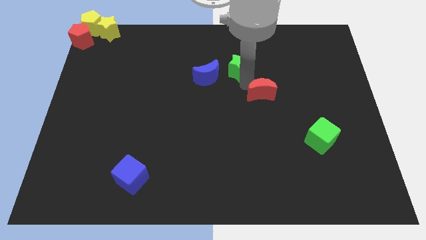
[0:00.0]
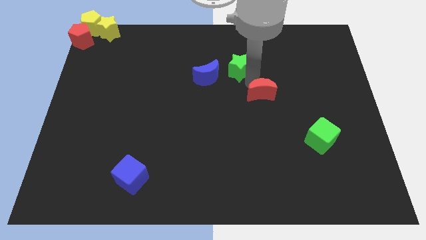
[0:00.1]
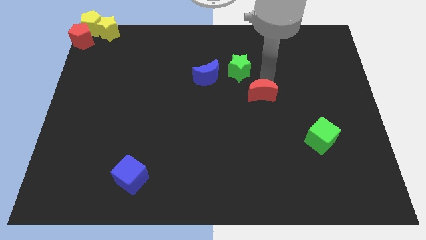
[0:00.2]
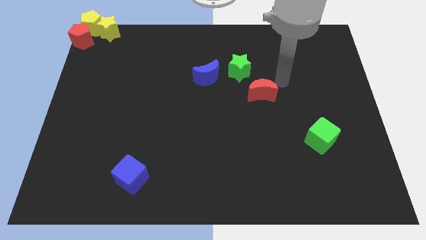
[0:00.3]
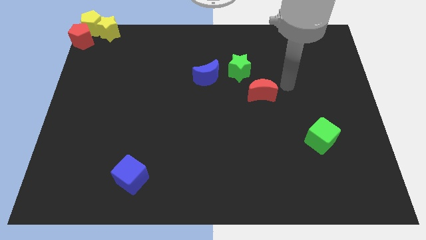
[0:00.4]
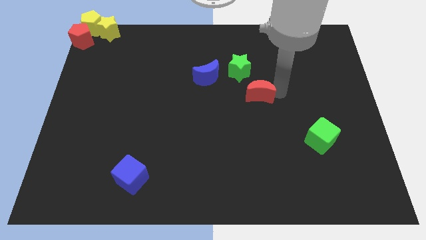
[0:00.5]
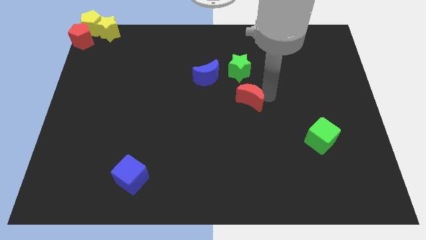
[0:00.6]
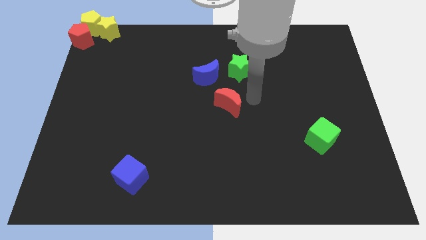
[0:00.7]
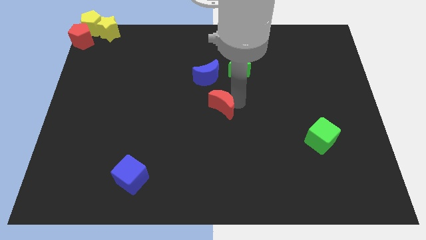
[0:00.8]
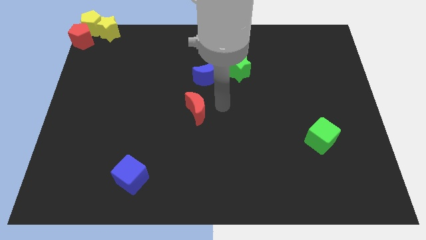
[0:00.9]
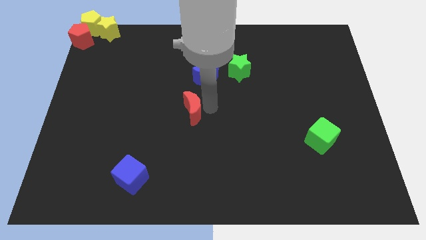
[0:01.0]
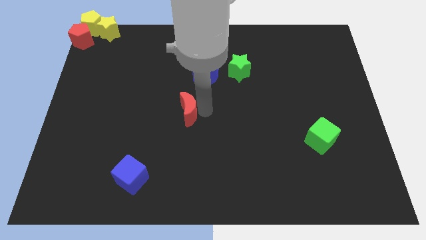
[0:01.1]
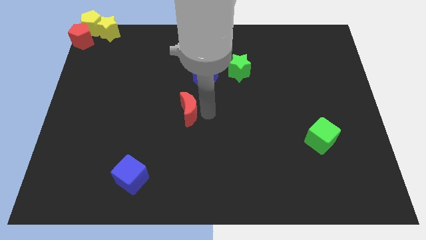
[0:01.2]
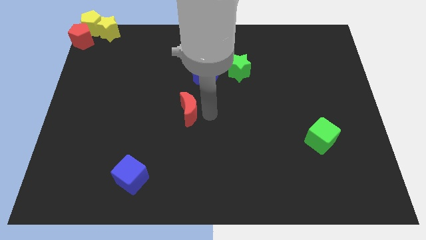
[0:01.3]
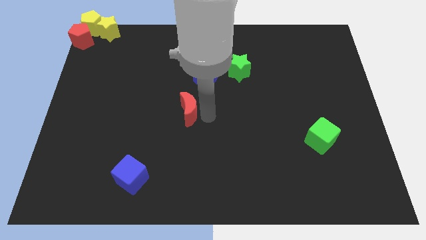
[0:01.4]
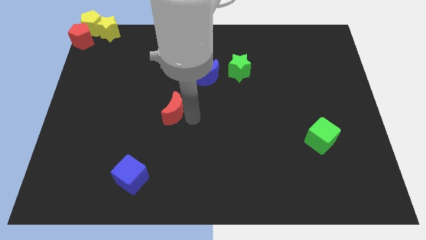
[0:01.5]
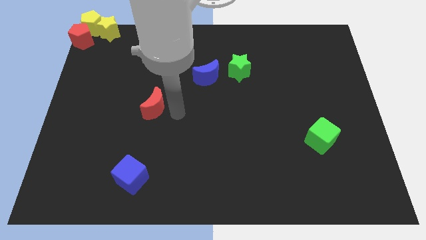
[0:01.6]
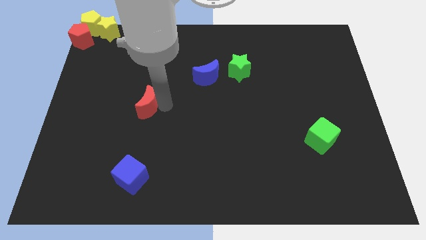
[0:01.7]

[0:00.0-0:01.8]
place red moon vertical to blue moon

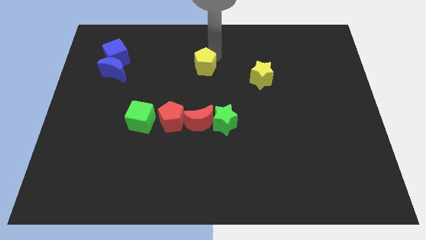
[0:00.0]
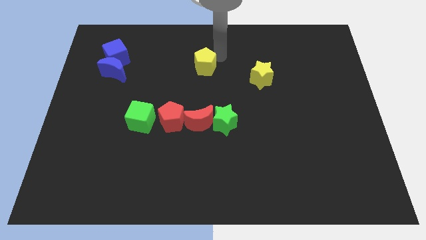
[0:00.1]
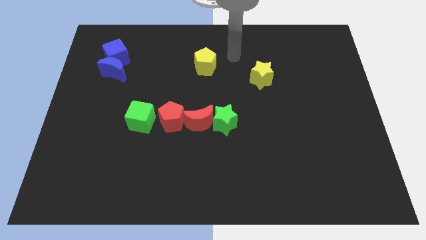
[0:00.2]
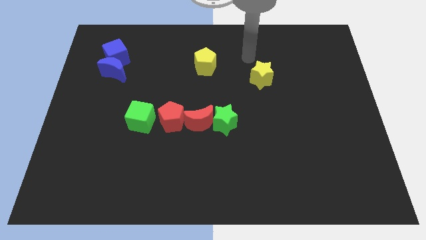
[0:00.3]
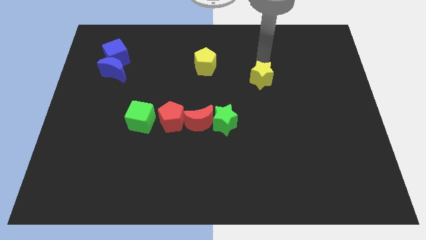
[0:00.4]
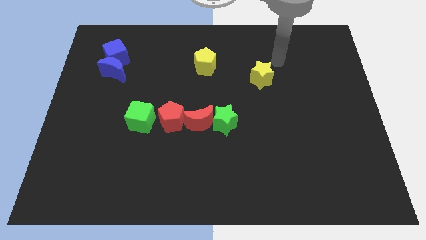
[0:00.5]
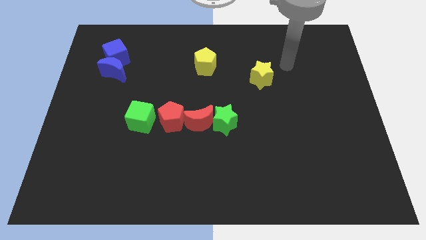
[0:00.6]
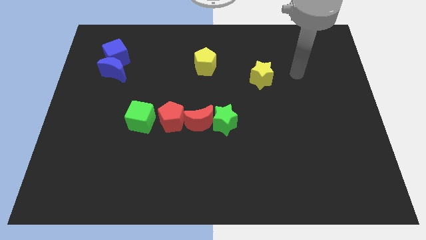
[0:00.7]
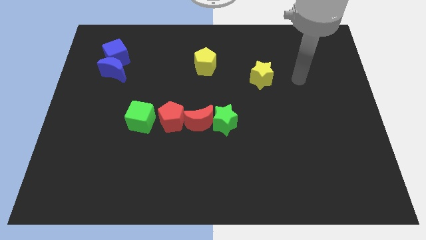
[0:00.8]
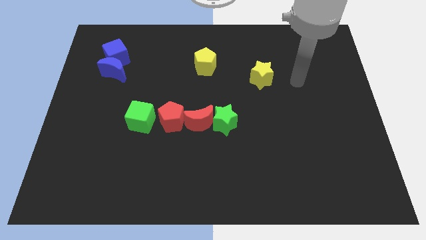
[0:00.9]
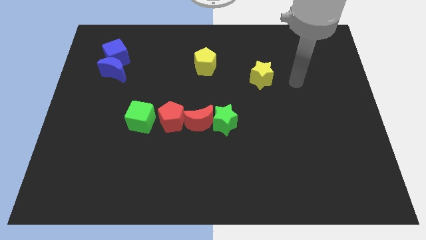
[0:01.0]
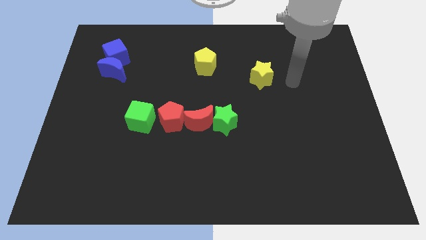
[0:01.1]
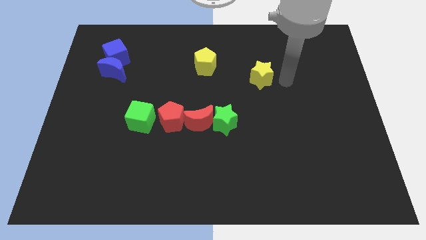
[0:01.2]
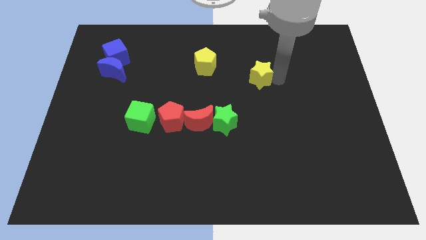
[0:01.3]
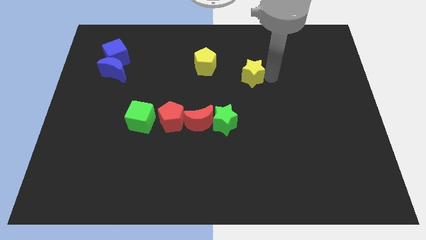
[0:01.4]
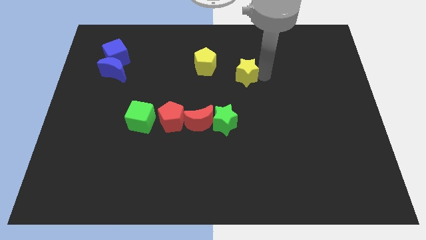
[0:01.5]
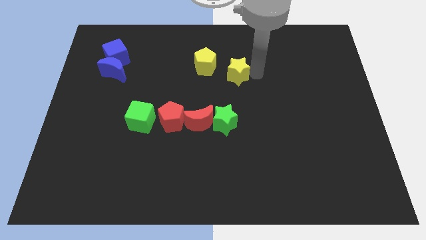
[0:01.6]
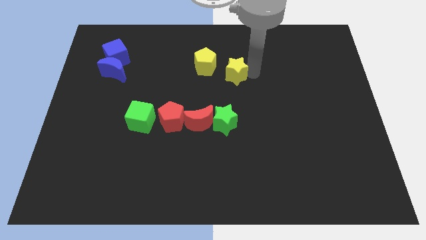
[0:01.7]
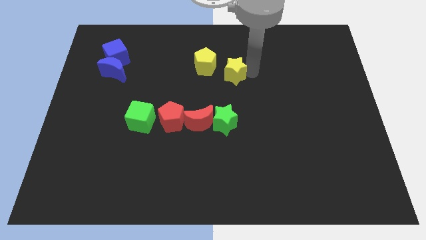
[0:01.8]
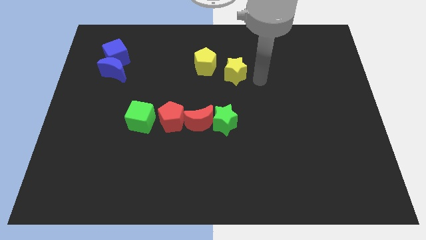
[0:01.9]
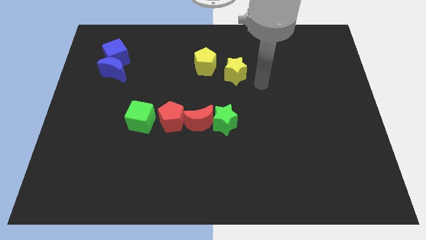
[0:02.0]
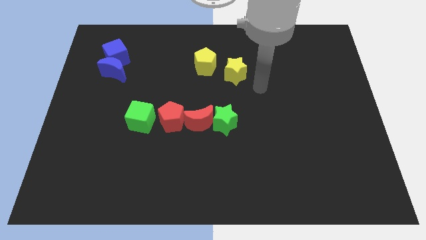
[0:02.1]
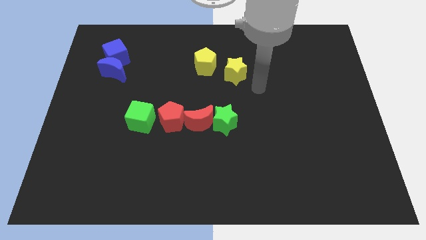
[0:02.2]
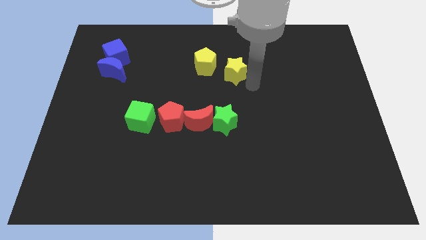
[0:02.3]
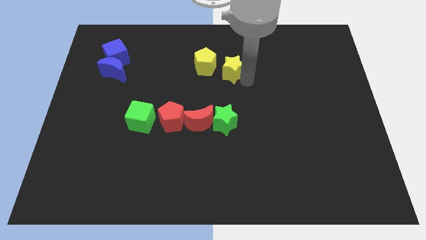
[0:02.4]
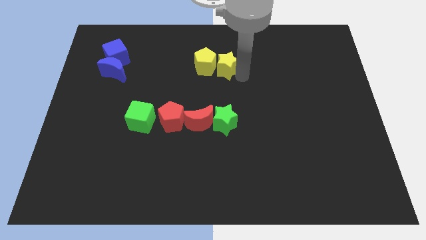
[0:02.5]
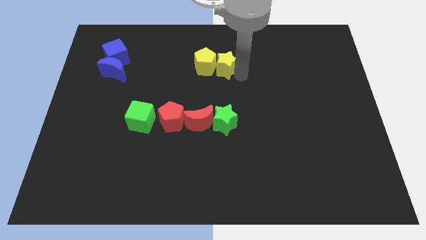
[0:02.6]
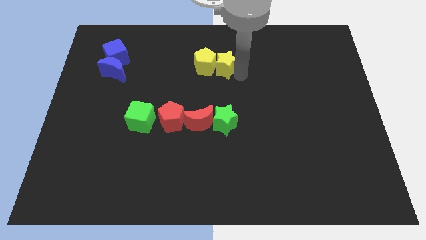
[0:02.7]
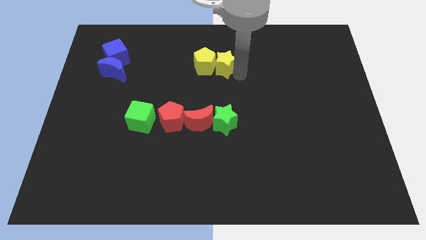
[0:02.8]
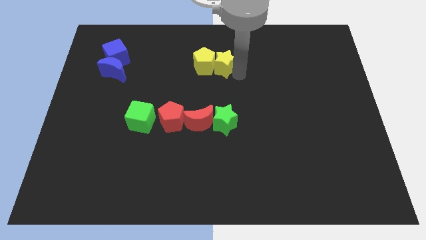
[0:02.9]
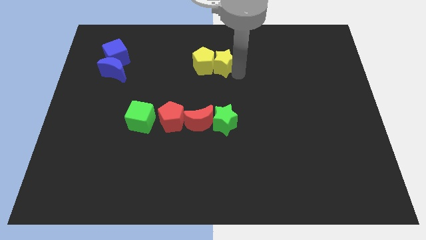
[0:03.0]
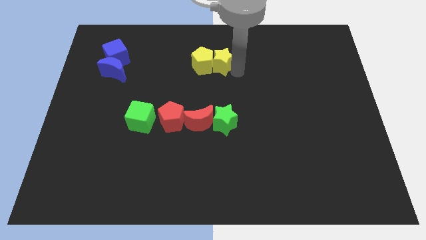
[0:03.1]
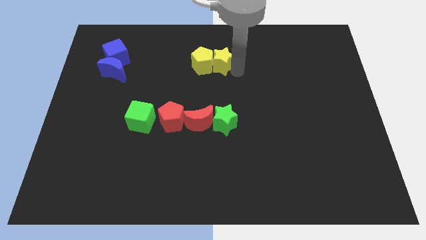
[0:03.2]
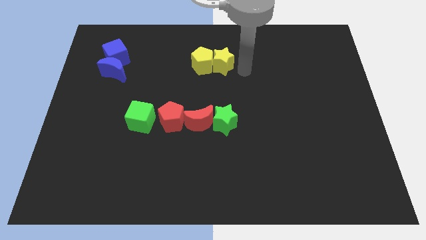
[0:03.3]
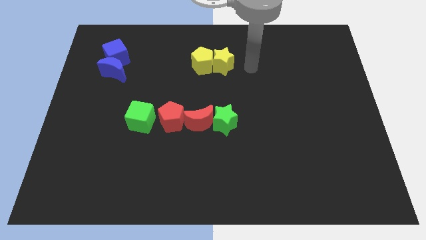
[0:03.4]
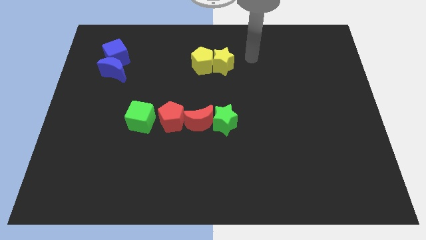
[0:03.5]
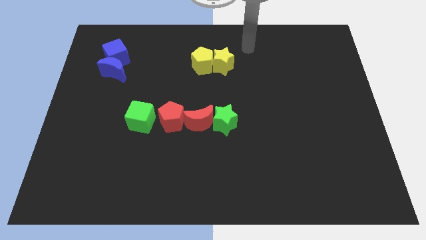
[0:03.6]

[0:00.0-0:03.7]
move the yellow star to the right side of the yellow pentagon

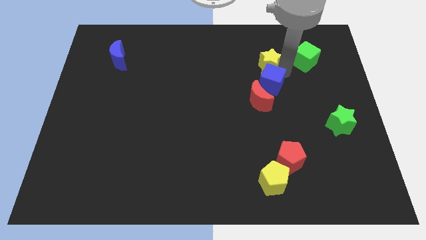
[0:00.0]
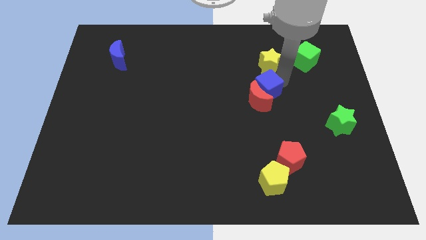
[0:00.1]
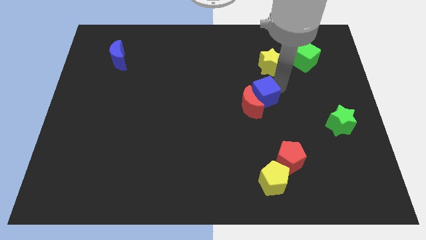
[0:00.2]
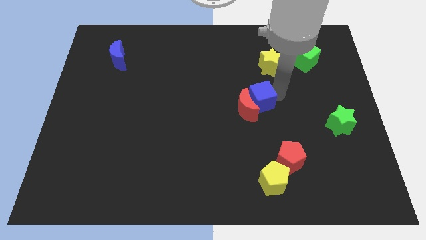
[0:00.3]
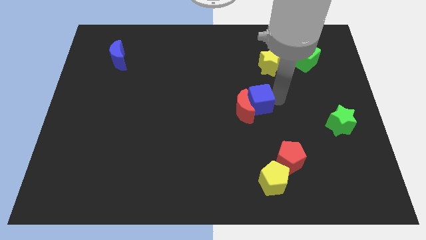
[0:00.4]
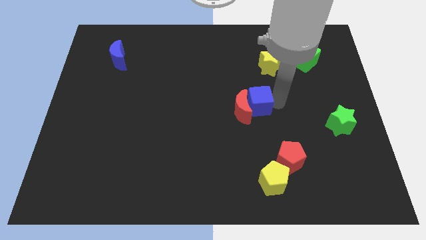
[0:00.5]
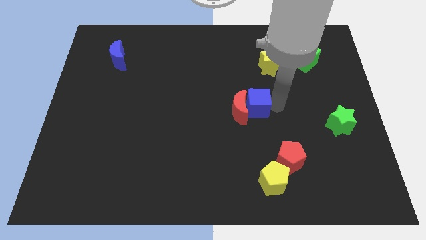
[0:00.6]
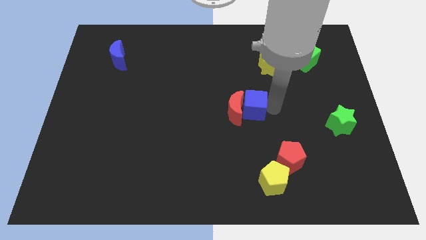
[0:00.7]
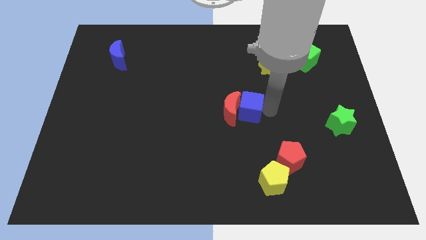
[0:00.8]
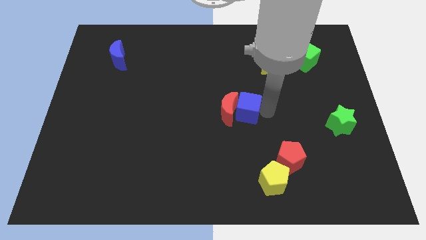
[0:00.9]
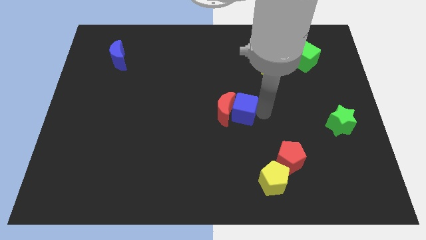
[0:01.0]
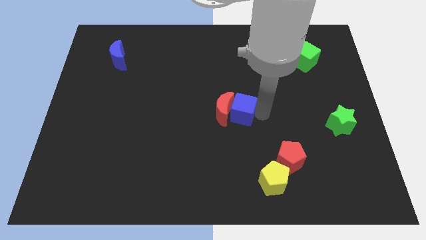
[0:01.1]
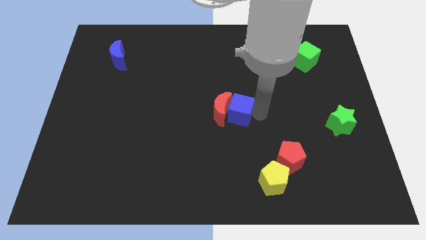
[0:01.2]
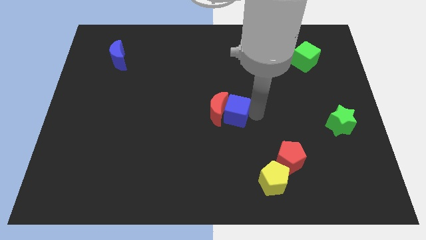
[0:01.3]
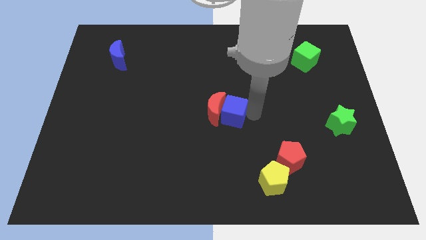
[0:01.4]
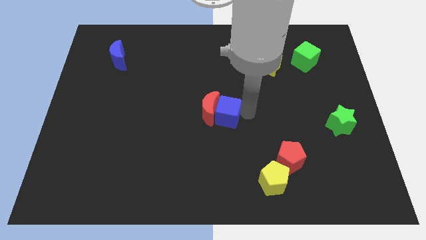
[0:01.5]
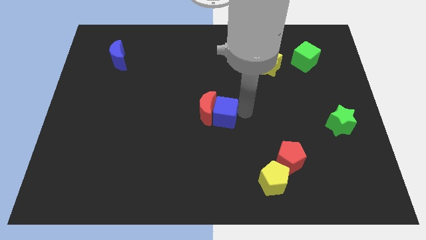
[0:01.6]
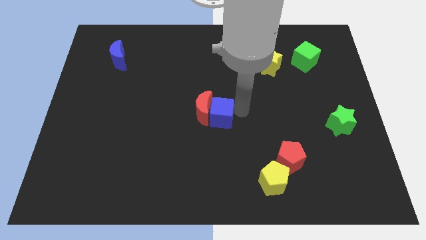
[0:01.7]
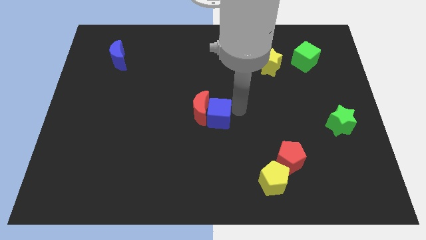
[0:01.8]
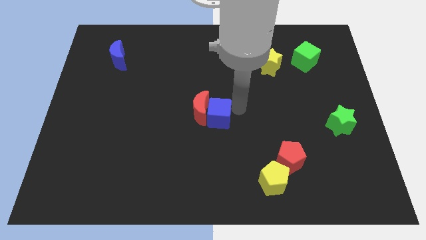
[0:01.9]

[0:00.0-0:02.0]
push the red moon with the help of blue cube

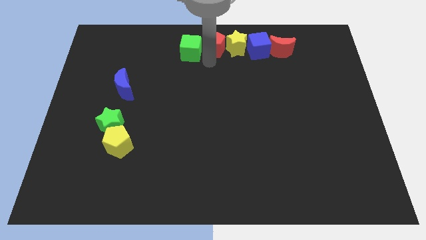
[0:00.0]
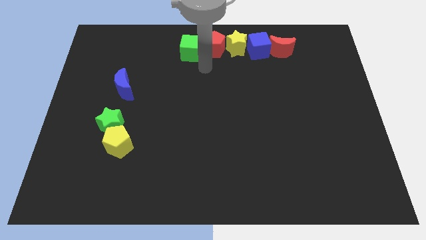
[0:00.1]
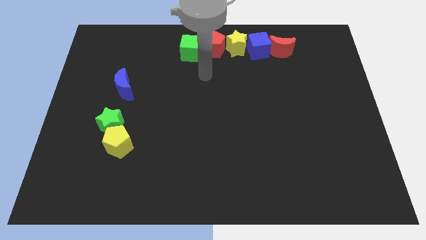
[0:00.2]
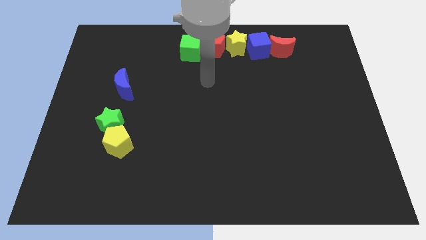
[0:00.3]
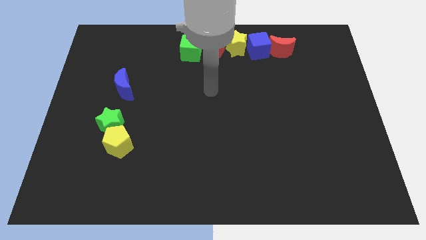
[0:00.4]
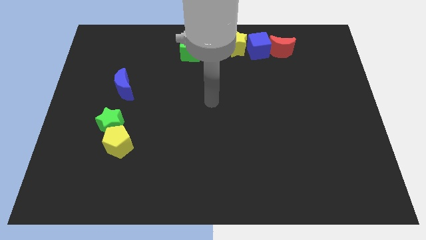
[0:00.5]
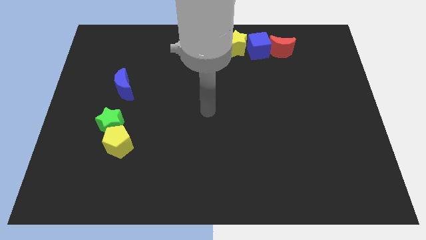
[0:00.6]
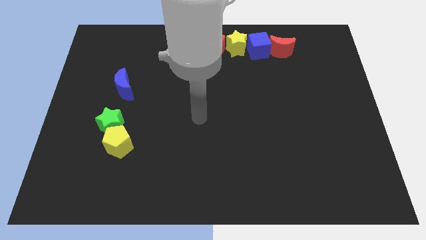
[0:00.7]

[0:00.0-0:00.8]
place your arm to the center of the board

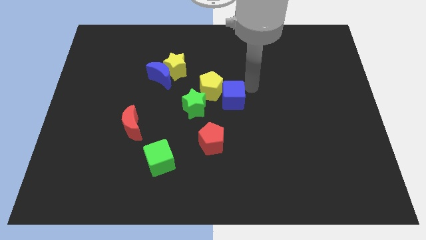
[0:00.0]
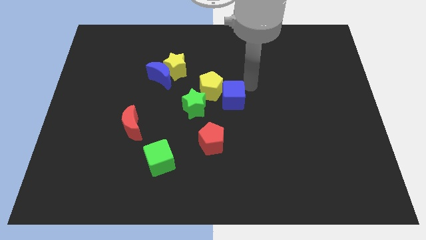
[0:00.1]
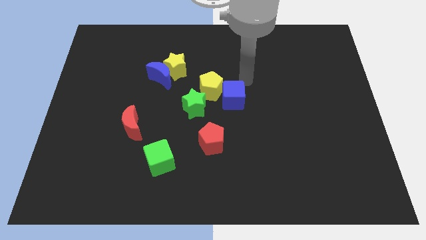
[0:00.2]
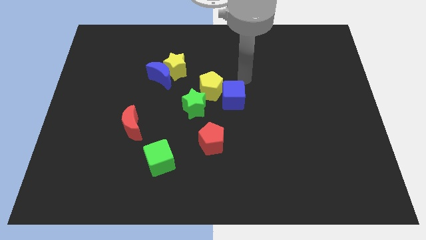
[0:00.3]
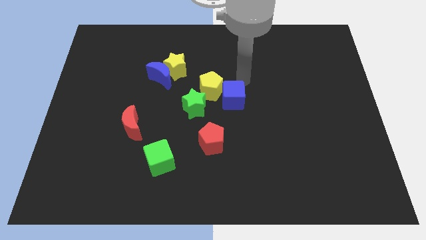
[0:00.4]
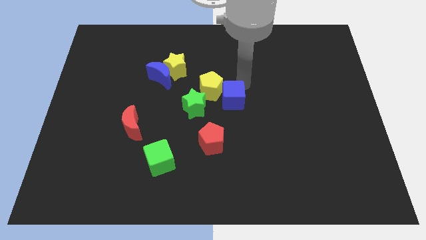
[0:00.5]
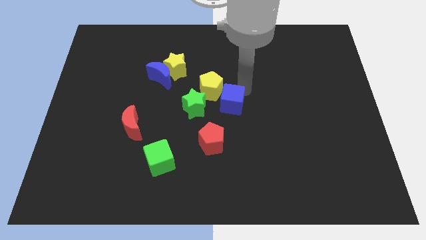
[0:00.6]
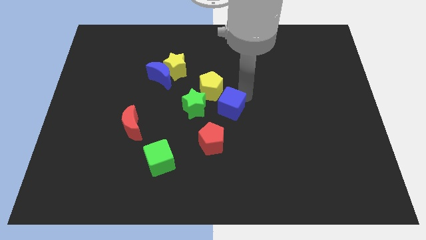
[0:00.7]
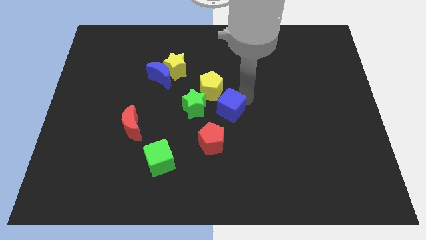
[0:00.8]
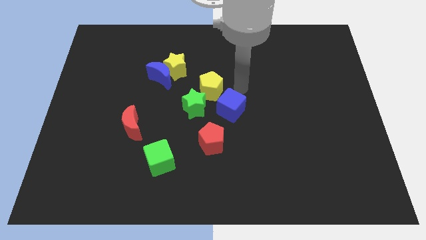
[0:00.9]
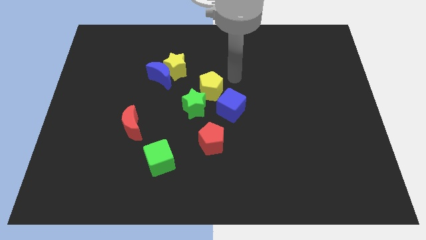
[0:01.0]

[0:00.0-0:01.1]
put the blue cube at the bottom right of the yellow pentagon
